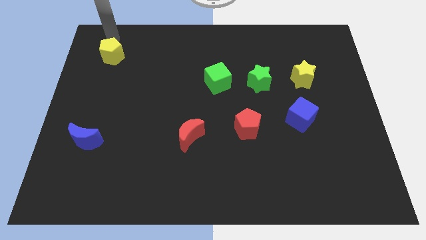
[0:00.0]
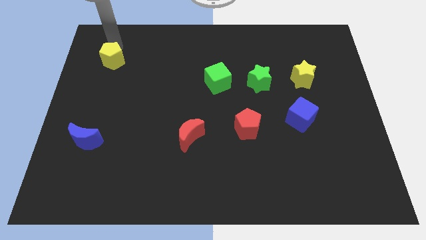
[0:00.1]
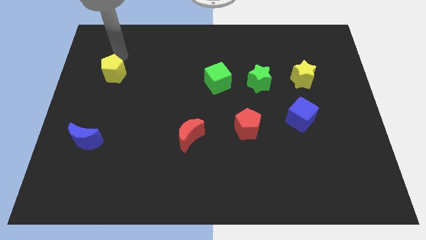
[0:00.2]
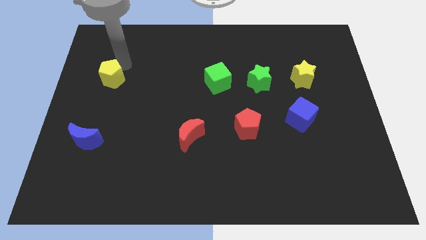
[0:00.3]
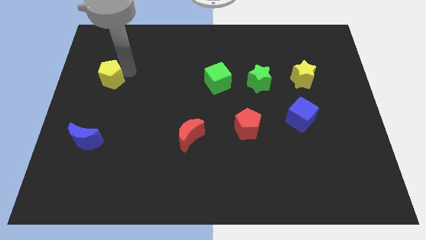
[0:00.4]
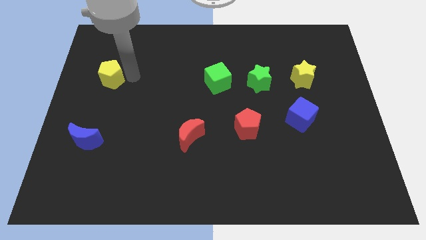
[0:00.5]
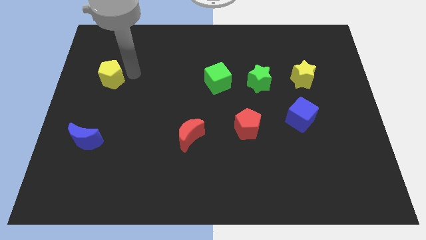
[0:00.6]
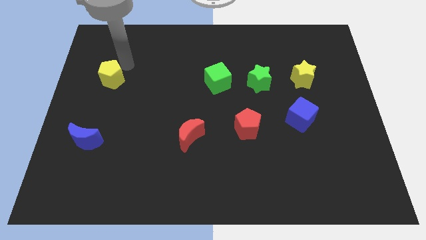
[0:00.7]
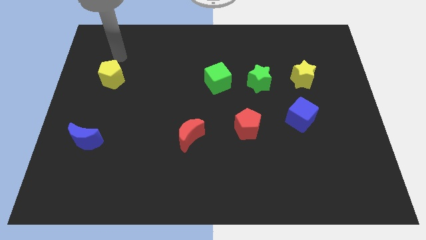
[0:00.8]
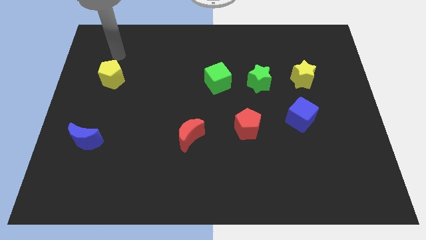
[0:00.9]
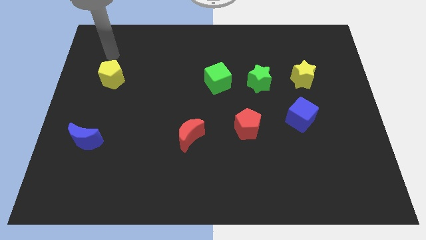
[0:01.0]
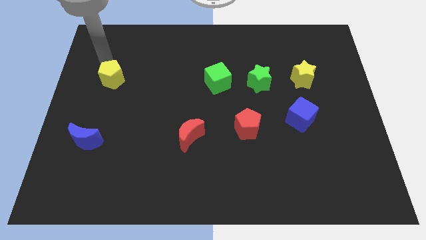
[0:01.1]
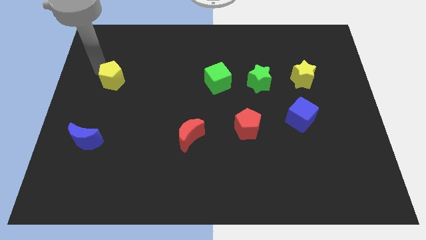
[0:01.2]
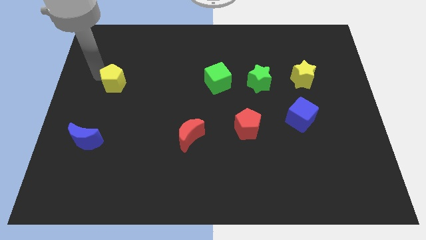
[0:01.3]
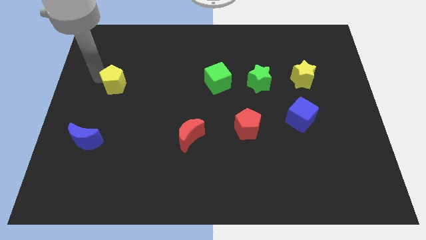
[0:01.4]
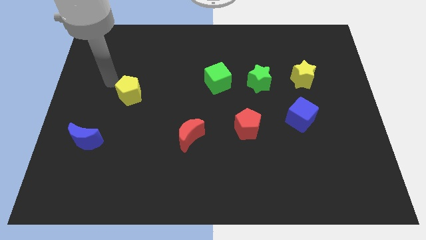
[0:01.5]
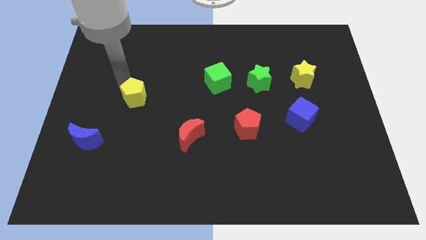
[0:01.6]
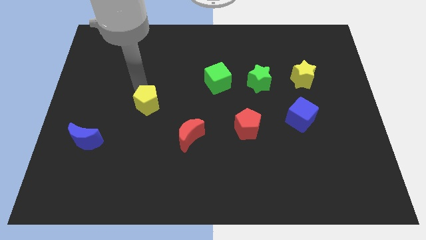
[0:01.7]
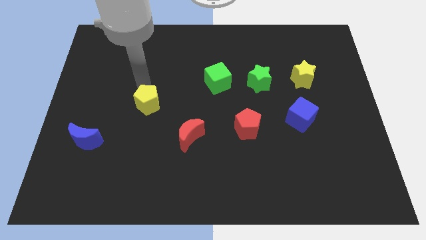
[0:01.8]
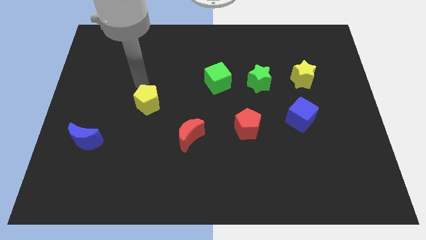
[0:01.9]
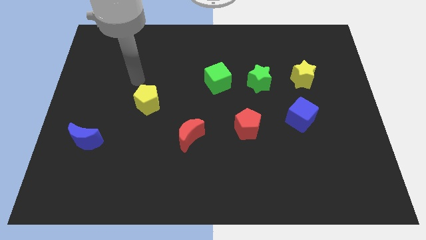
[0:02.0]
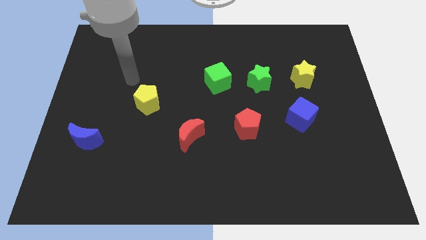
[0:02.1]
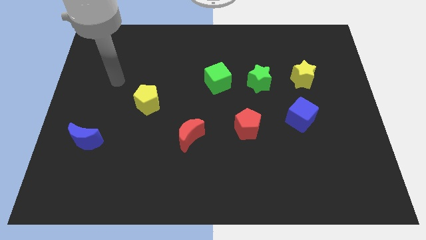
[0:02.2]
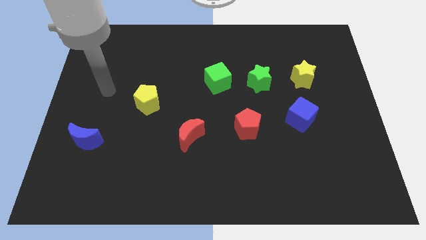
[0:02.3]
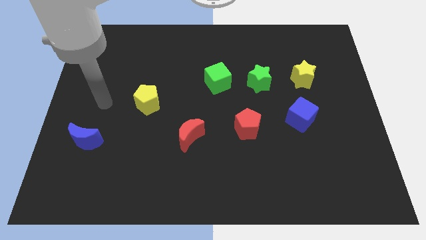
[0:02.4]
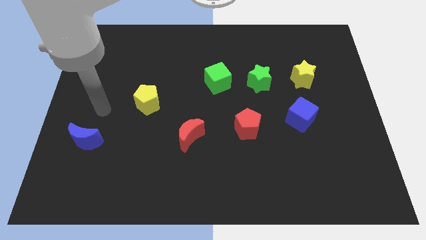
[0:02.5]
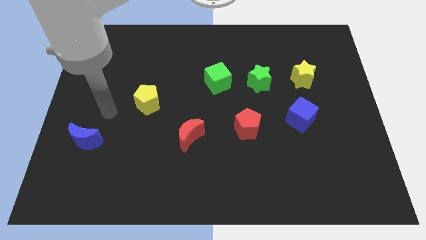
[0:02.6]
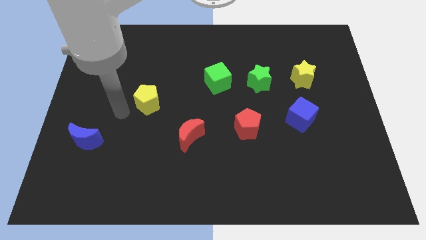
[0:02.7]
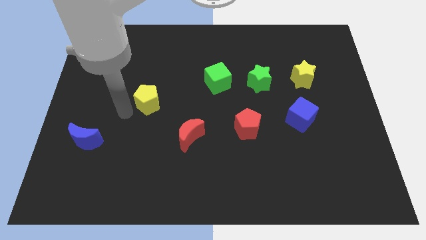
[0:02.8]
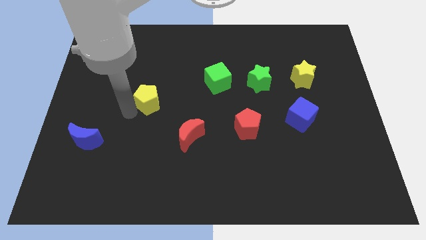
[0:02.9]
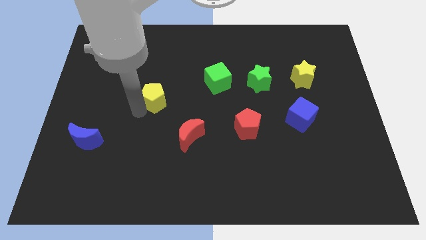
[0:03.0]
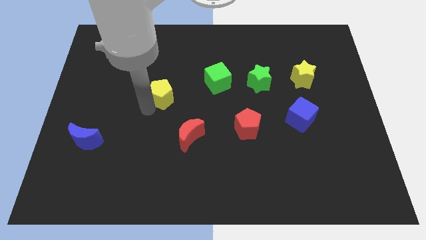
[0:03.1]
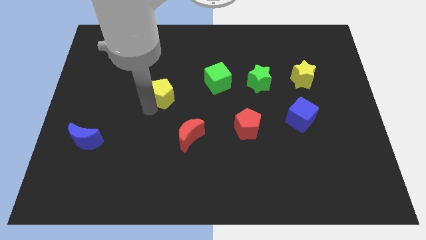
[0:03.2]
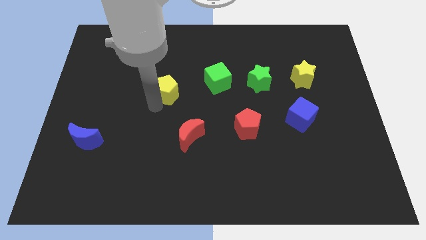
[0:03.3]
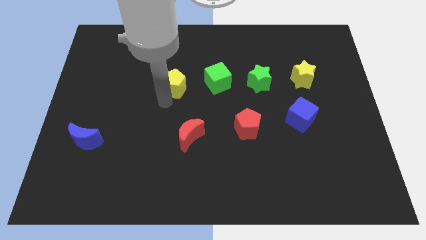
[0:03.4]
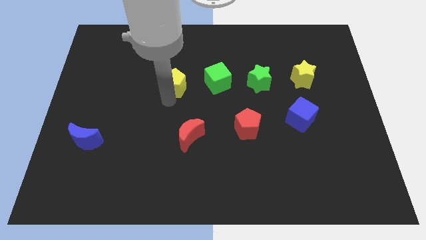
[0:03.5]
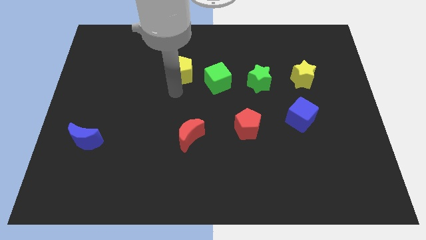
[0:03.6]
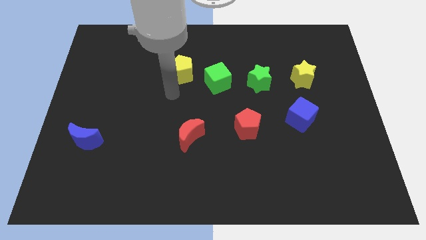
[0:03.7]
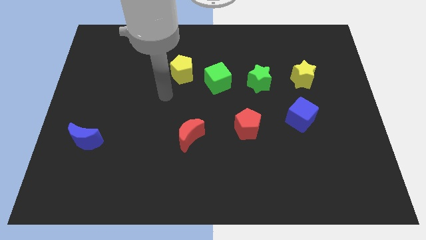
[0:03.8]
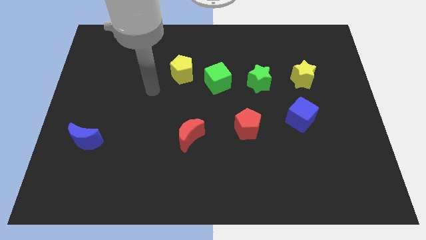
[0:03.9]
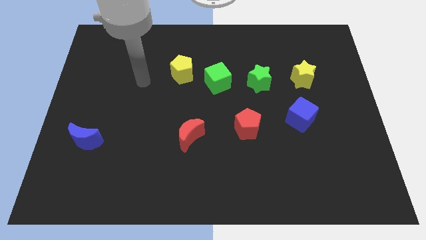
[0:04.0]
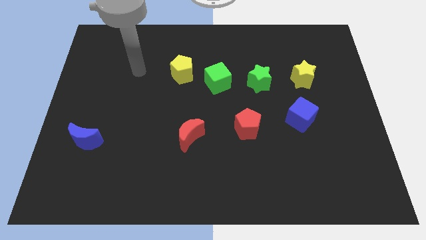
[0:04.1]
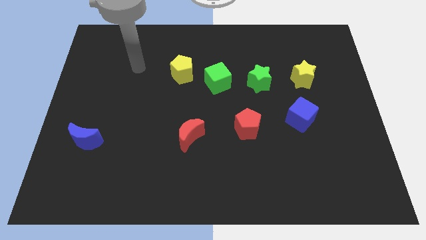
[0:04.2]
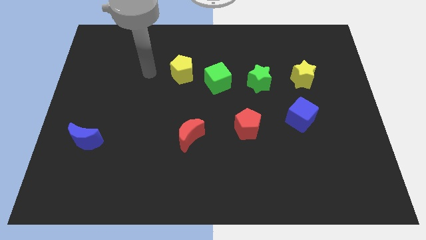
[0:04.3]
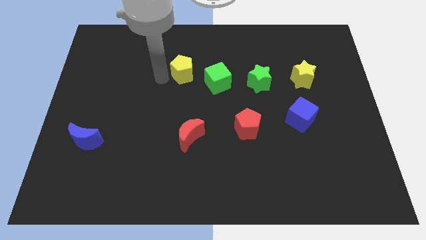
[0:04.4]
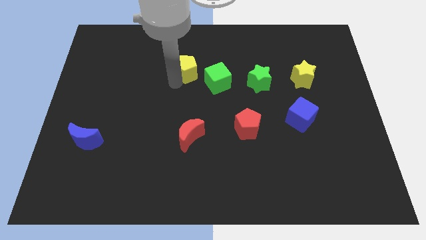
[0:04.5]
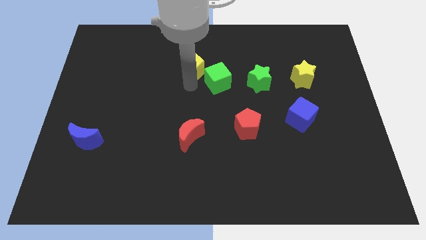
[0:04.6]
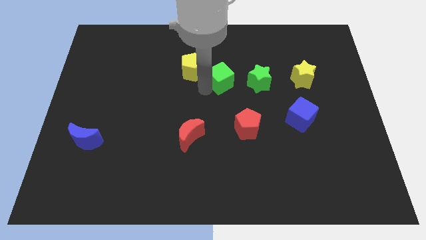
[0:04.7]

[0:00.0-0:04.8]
put the yellow pentagon above the red crescent

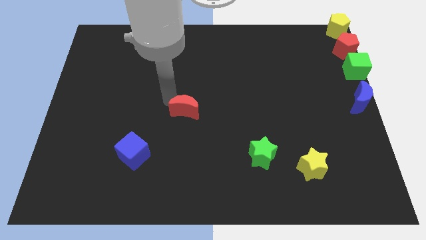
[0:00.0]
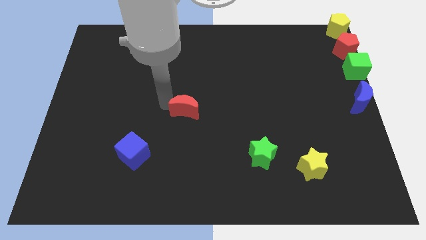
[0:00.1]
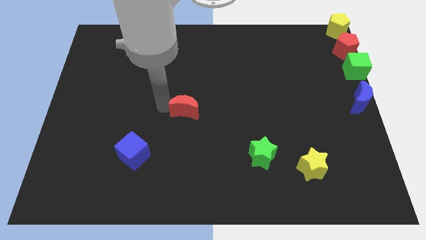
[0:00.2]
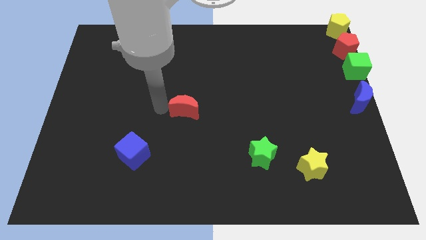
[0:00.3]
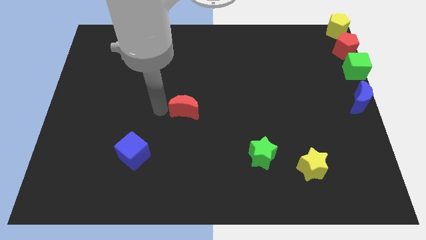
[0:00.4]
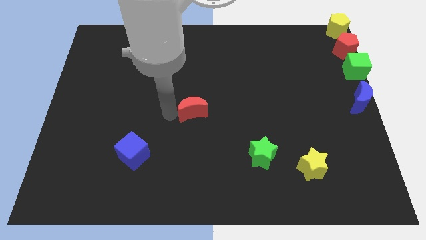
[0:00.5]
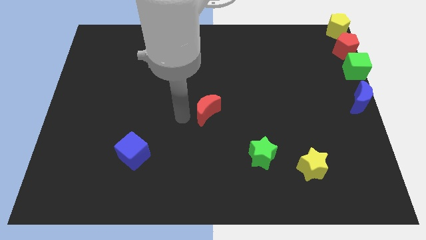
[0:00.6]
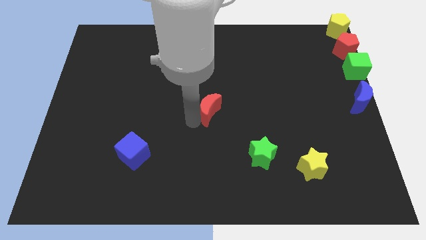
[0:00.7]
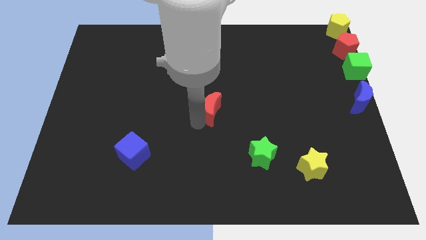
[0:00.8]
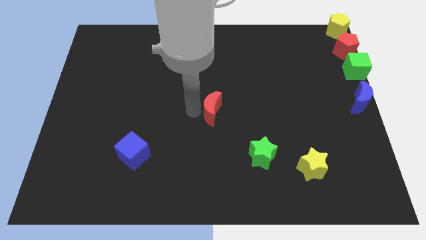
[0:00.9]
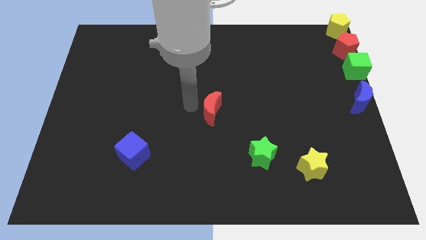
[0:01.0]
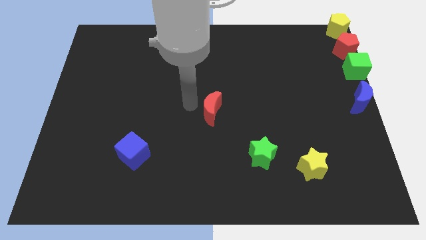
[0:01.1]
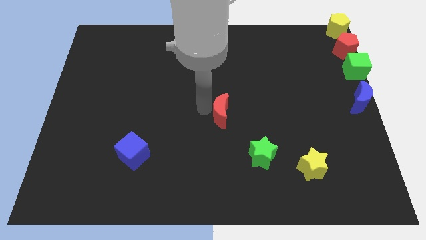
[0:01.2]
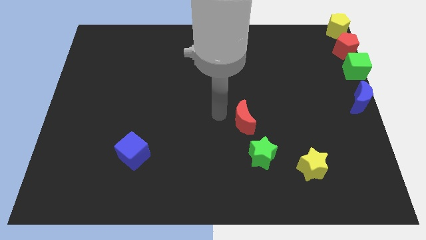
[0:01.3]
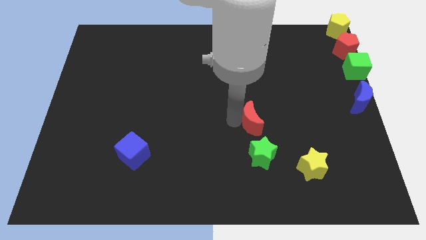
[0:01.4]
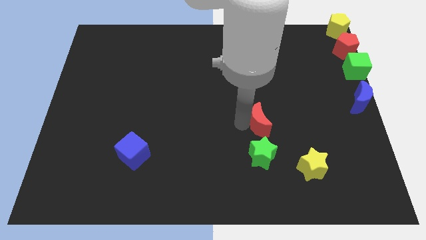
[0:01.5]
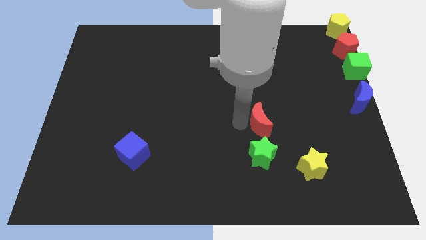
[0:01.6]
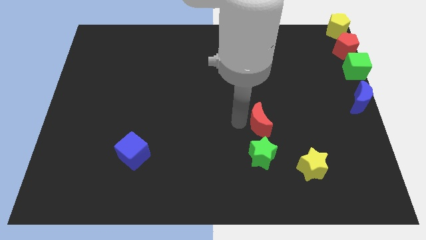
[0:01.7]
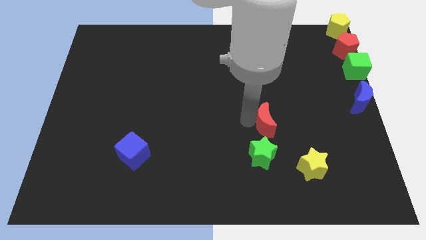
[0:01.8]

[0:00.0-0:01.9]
move the red moon to the top of the green star

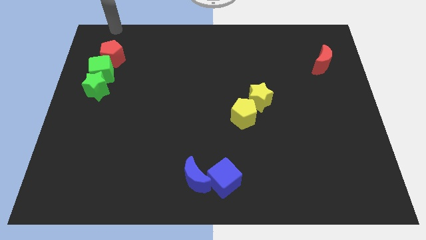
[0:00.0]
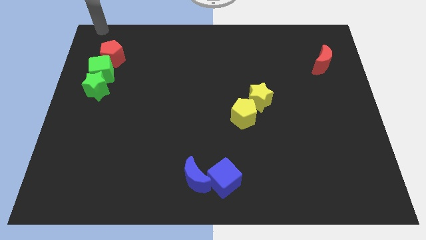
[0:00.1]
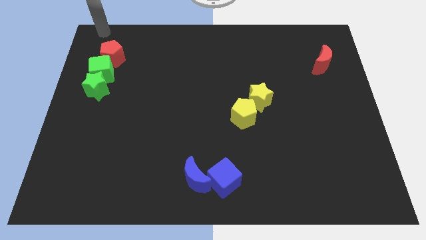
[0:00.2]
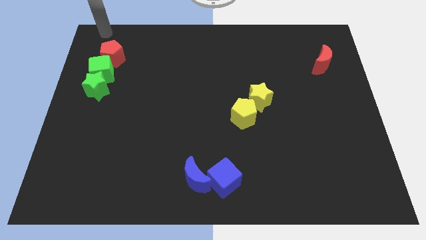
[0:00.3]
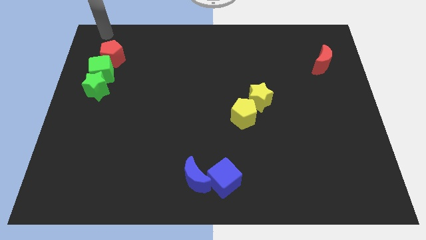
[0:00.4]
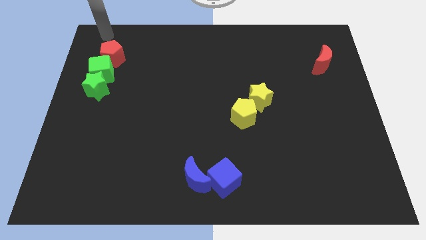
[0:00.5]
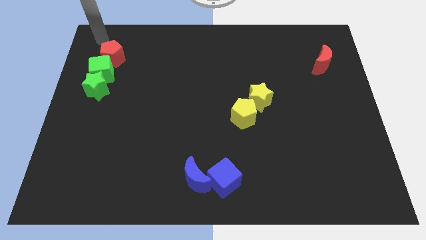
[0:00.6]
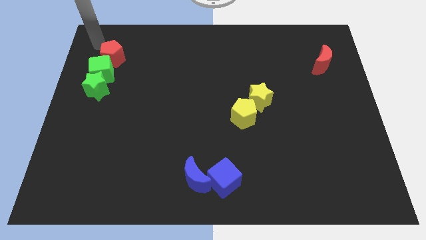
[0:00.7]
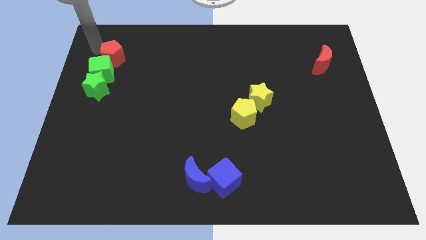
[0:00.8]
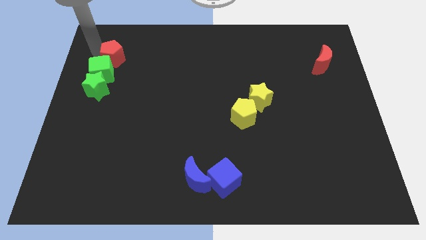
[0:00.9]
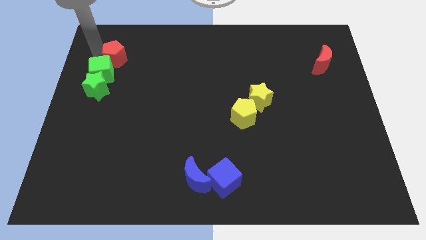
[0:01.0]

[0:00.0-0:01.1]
tap the red pentagon

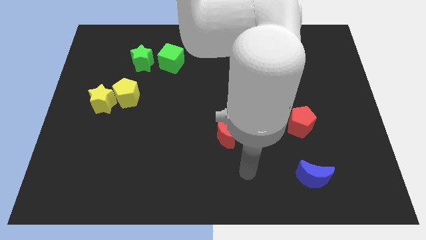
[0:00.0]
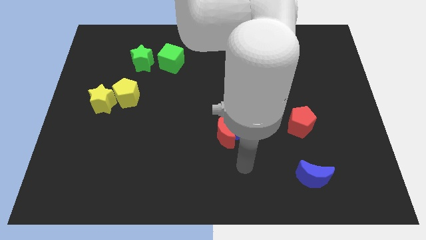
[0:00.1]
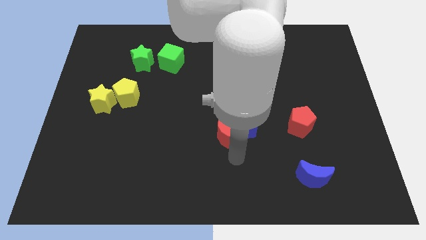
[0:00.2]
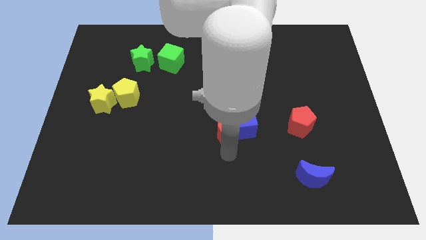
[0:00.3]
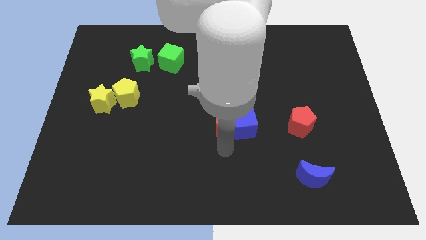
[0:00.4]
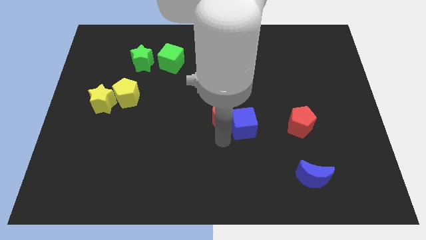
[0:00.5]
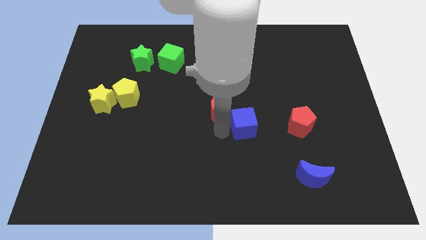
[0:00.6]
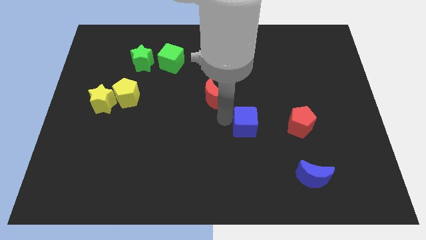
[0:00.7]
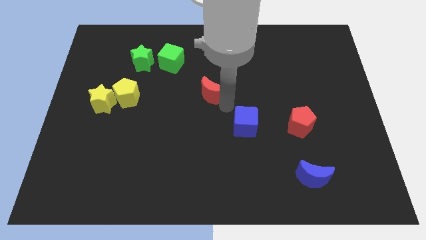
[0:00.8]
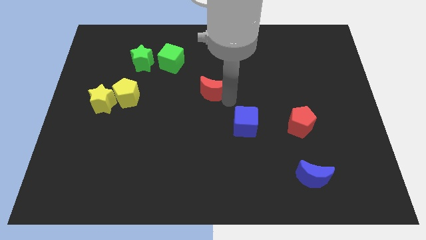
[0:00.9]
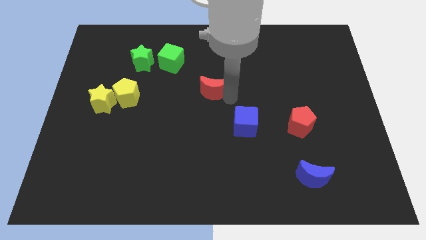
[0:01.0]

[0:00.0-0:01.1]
drag the red moon slightly upwards

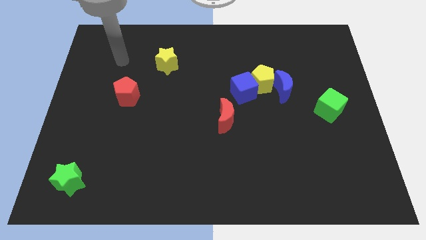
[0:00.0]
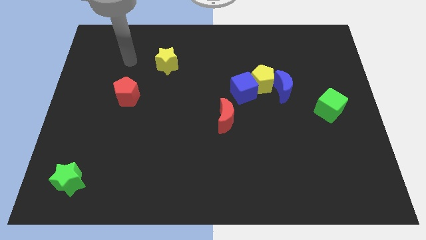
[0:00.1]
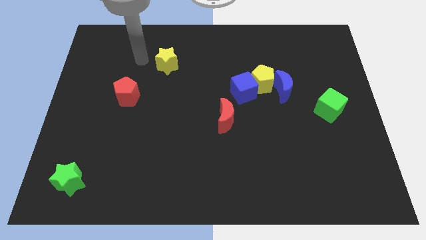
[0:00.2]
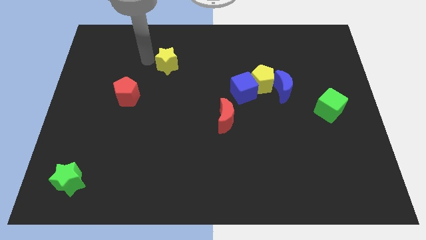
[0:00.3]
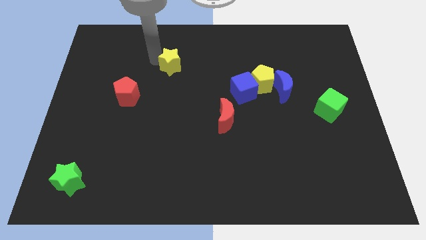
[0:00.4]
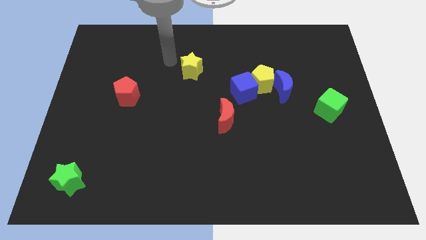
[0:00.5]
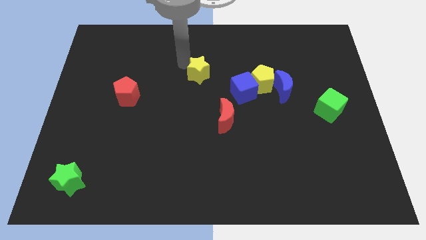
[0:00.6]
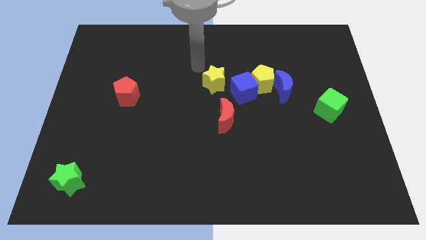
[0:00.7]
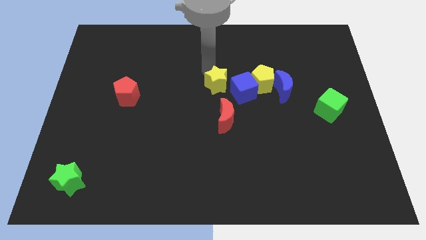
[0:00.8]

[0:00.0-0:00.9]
move yellow star left above the blue cube
